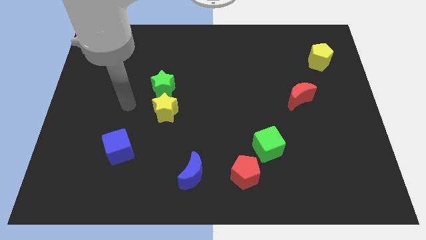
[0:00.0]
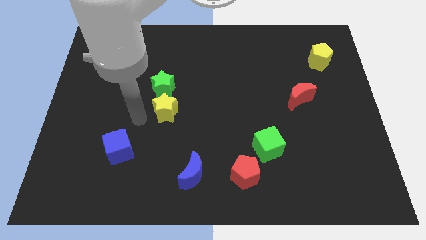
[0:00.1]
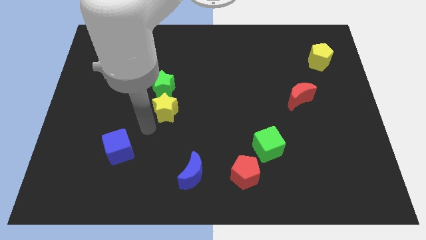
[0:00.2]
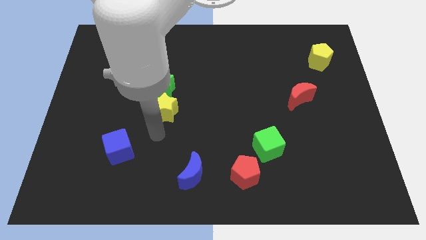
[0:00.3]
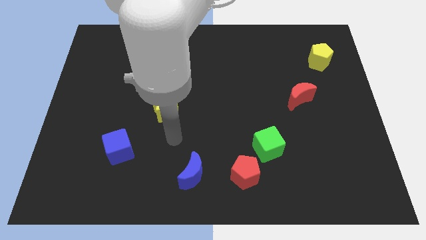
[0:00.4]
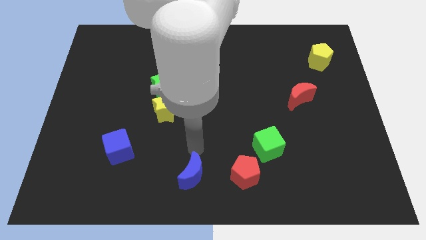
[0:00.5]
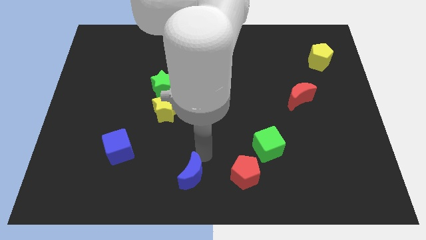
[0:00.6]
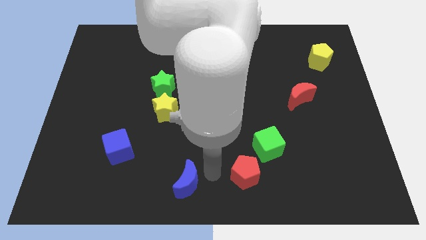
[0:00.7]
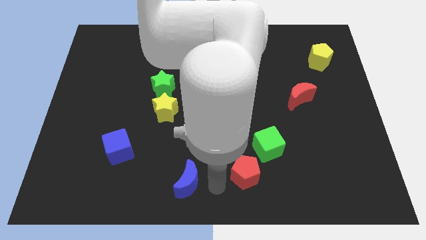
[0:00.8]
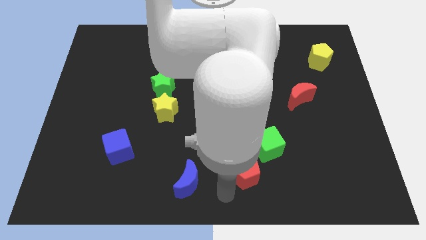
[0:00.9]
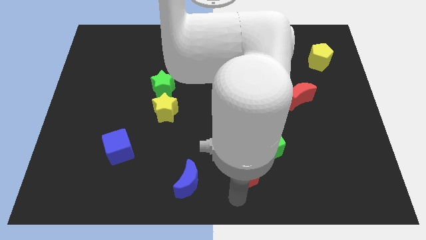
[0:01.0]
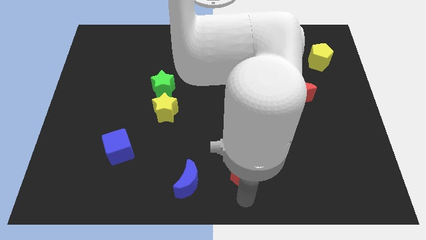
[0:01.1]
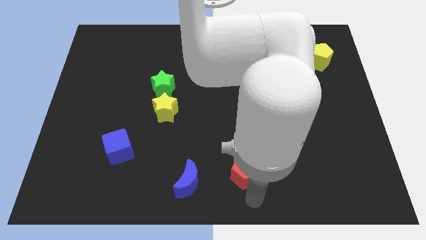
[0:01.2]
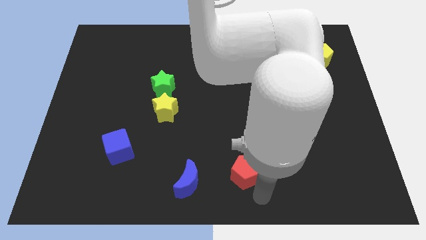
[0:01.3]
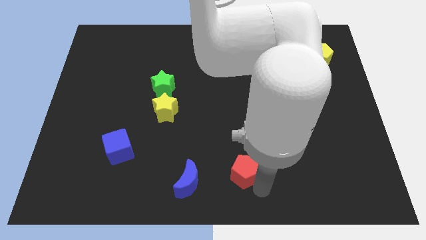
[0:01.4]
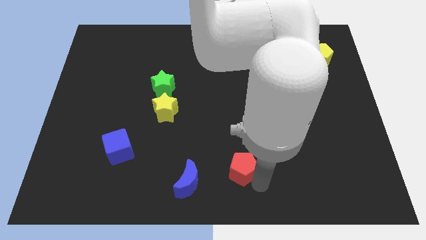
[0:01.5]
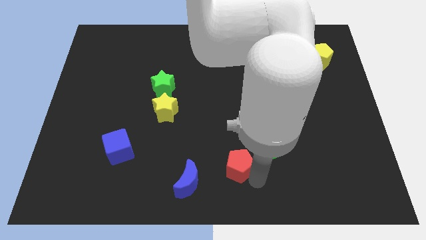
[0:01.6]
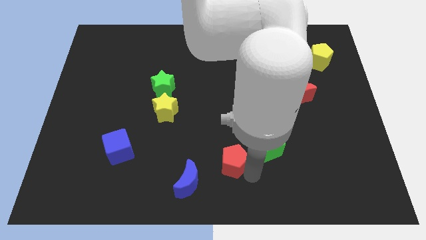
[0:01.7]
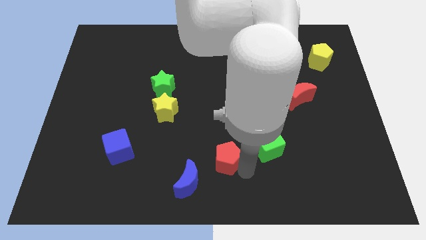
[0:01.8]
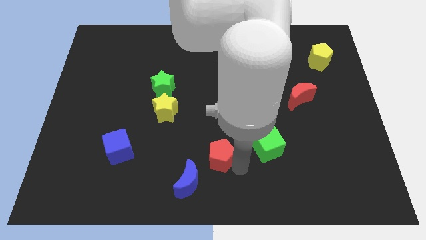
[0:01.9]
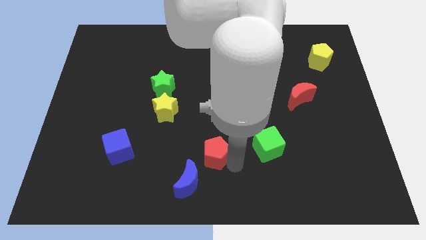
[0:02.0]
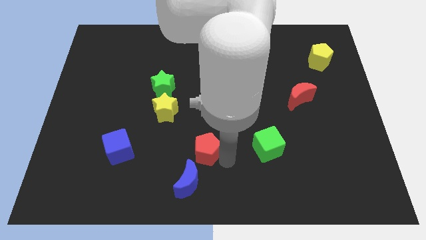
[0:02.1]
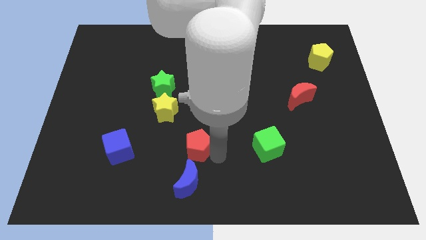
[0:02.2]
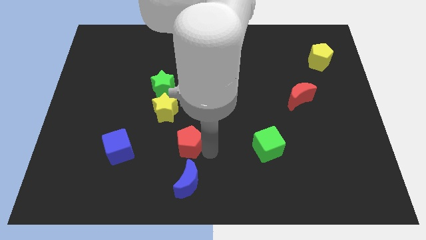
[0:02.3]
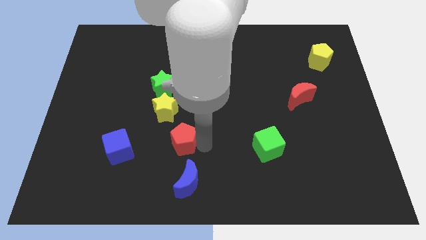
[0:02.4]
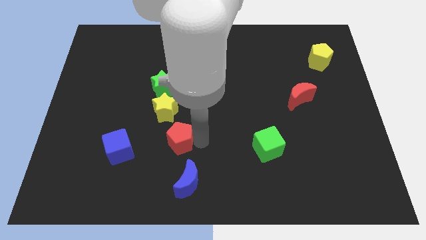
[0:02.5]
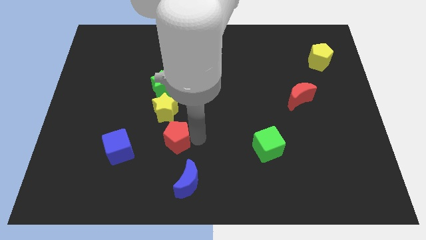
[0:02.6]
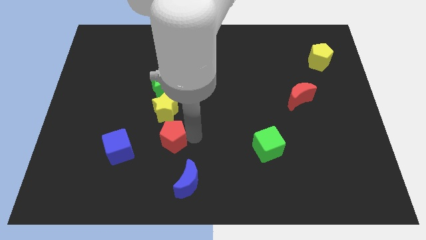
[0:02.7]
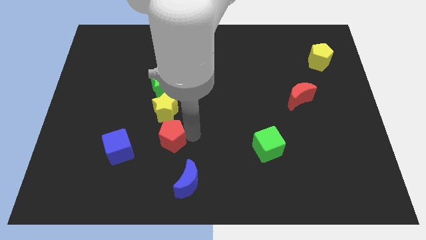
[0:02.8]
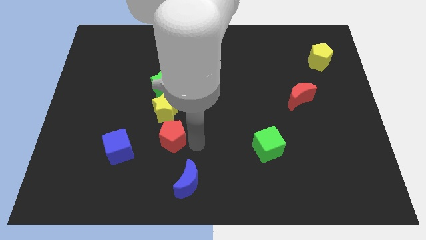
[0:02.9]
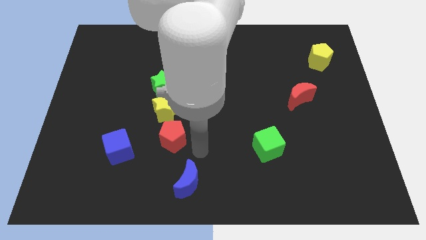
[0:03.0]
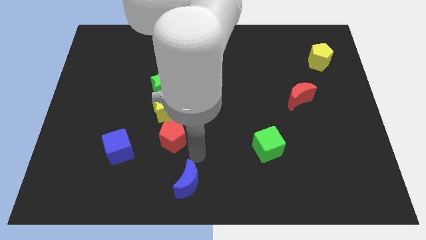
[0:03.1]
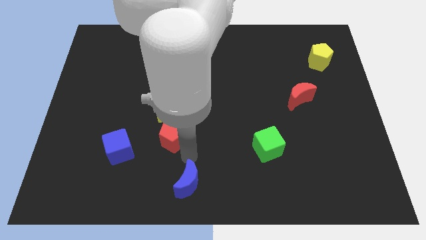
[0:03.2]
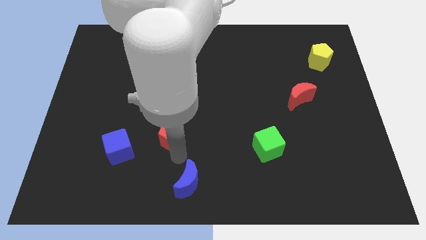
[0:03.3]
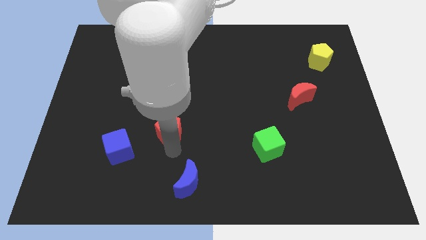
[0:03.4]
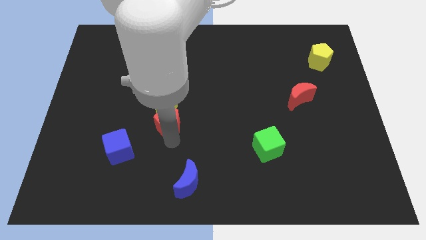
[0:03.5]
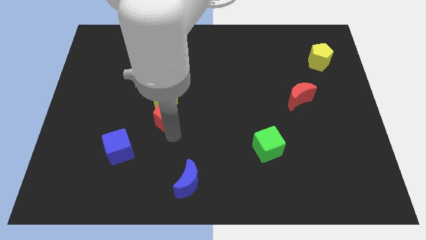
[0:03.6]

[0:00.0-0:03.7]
put the red pentagon towards the yellow star

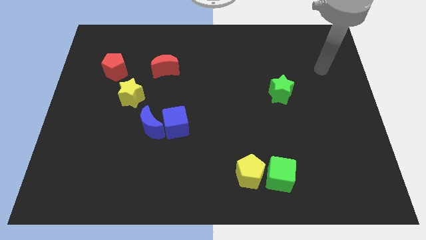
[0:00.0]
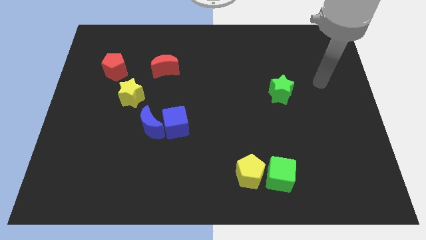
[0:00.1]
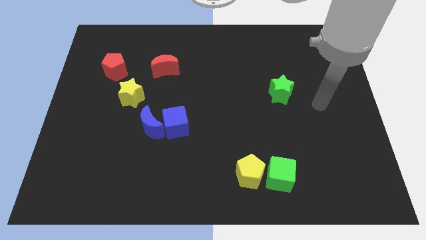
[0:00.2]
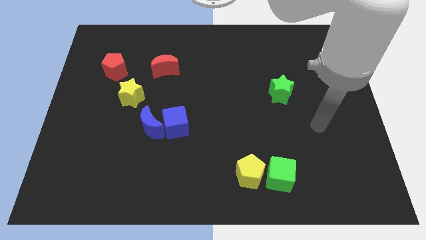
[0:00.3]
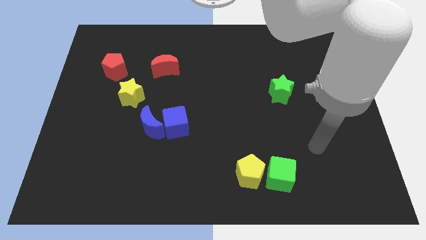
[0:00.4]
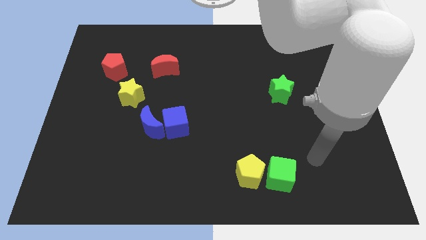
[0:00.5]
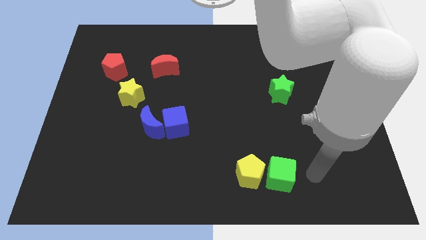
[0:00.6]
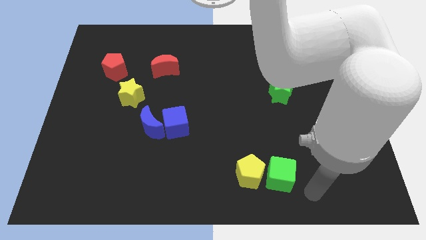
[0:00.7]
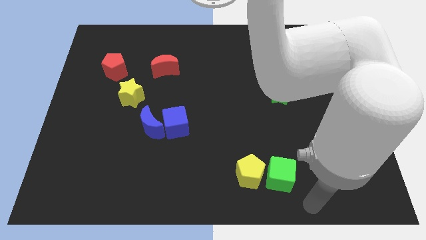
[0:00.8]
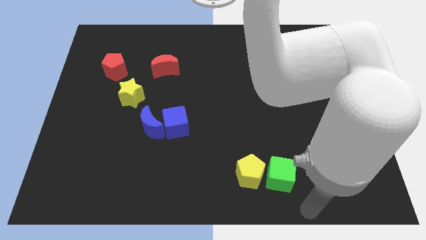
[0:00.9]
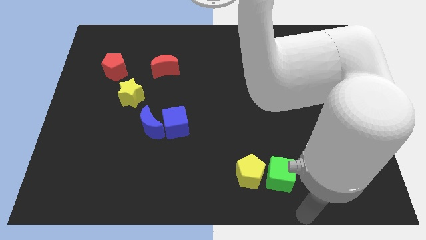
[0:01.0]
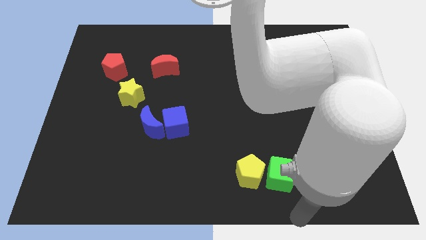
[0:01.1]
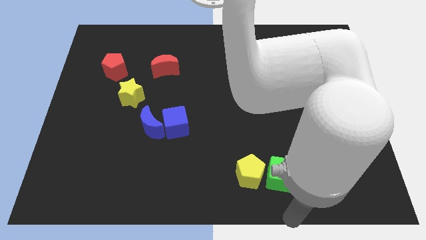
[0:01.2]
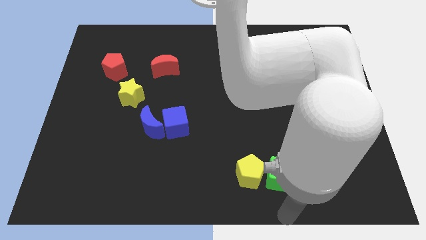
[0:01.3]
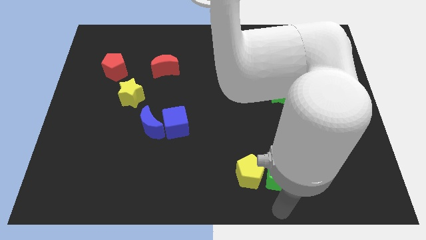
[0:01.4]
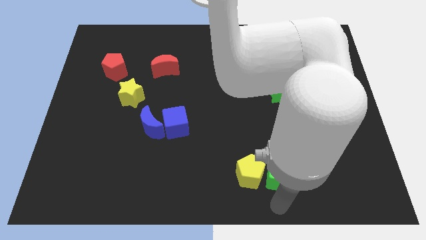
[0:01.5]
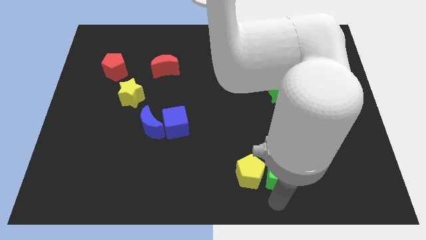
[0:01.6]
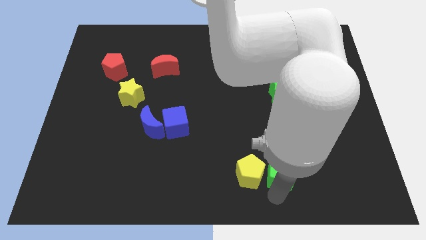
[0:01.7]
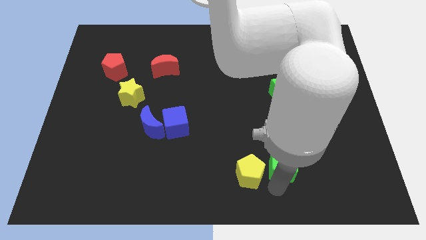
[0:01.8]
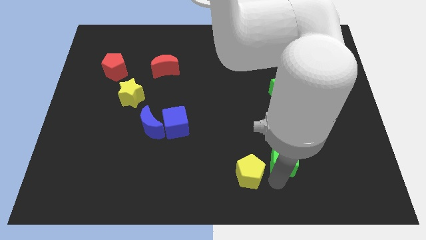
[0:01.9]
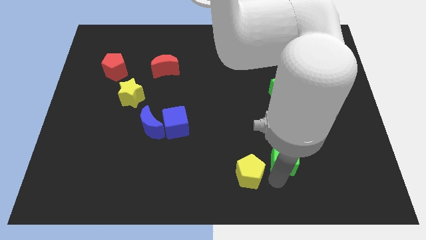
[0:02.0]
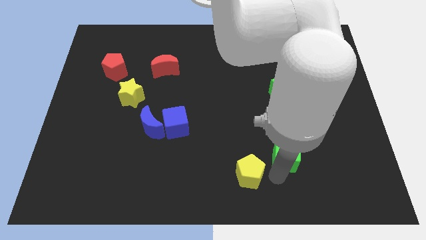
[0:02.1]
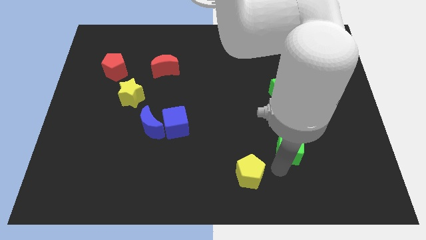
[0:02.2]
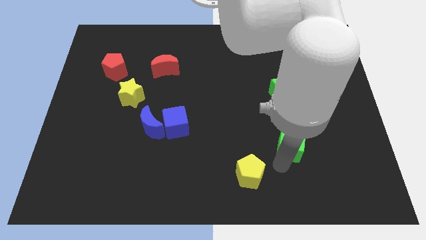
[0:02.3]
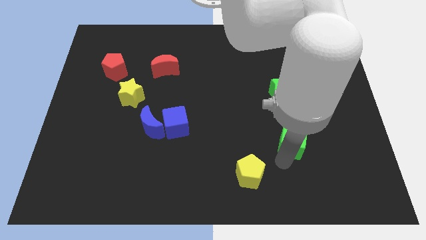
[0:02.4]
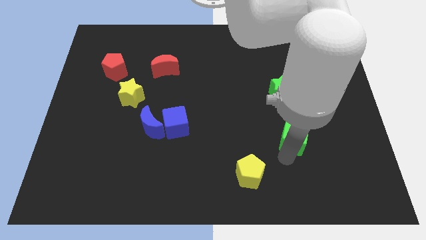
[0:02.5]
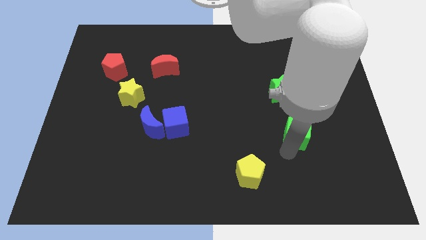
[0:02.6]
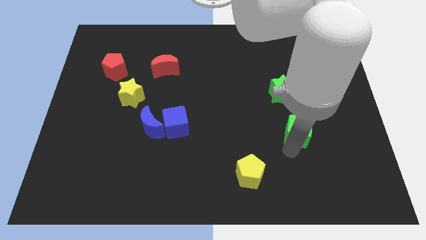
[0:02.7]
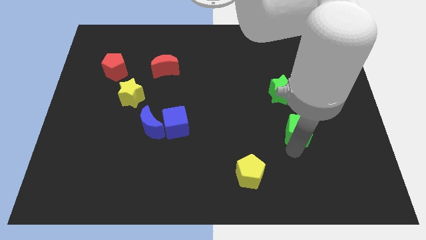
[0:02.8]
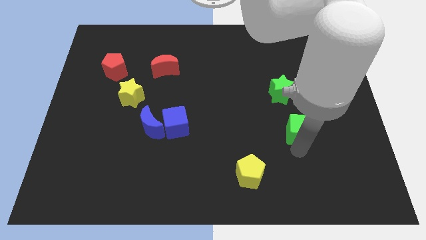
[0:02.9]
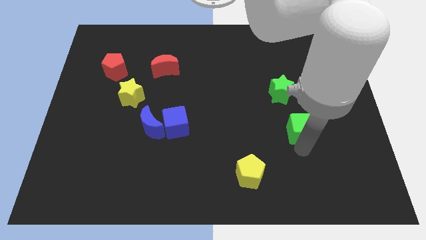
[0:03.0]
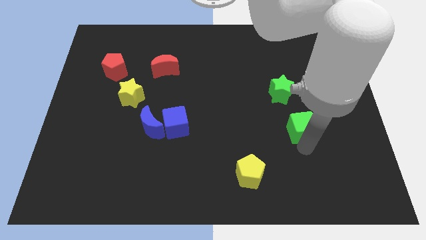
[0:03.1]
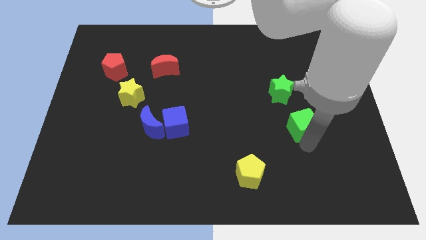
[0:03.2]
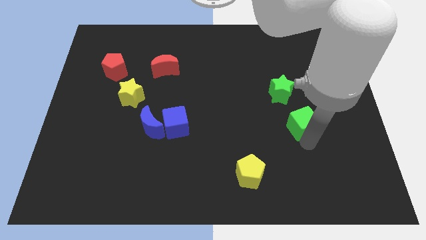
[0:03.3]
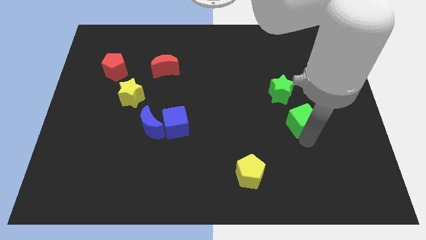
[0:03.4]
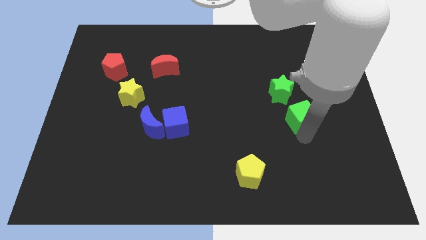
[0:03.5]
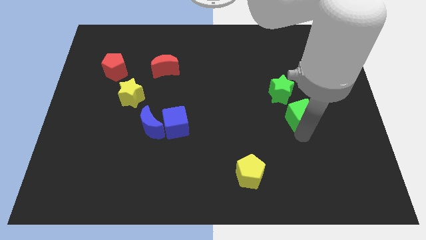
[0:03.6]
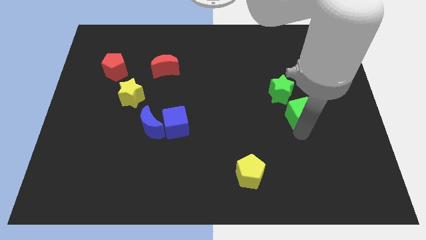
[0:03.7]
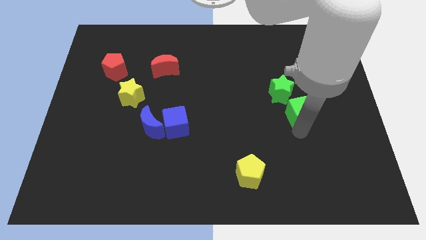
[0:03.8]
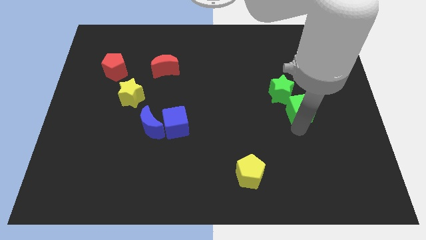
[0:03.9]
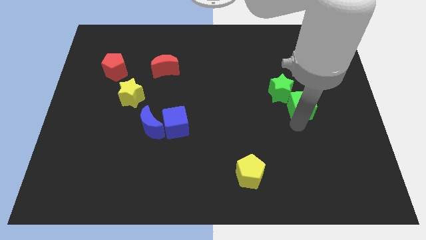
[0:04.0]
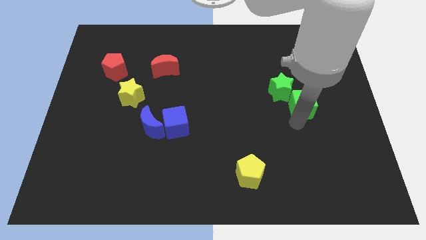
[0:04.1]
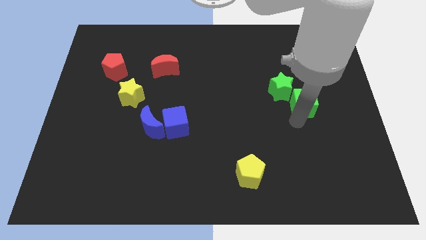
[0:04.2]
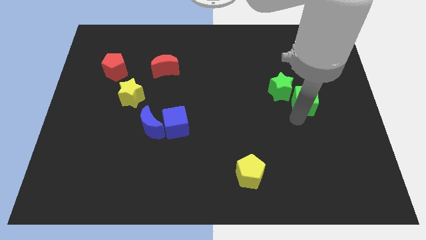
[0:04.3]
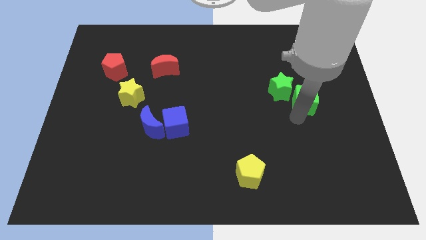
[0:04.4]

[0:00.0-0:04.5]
move the green cube to the green star

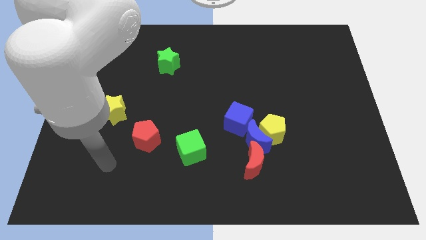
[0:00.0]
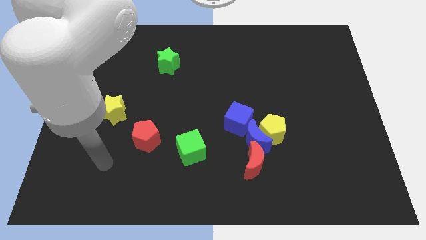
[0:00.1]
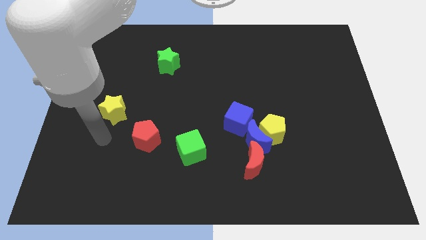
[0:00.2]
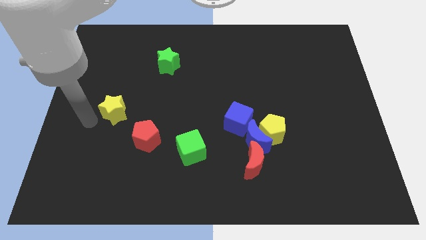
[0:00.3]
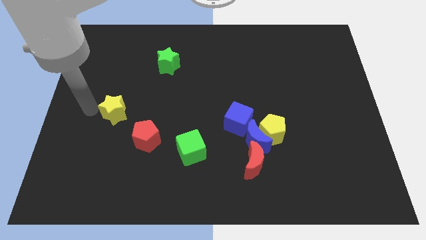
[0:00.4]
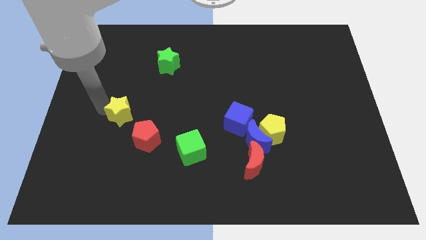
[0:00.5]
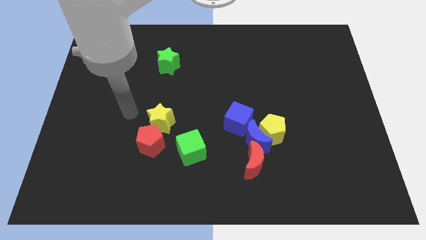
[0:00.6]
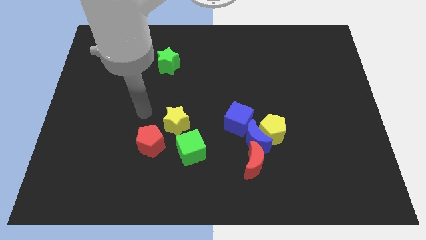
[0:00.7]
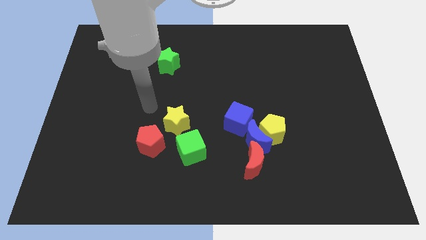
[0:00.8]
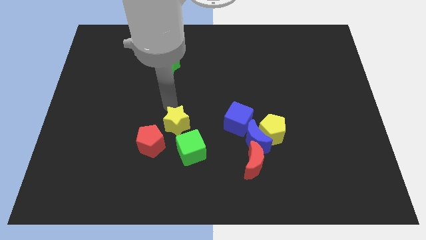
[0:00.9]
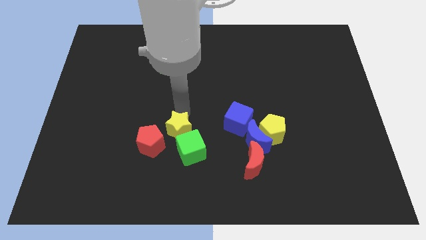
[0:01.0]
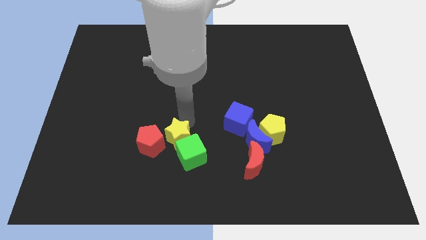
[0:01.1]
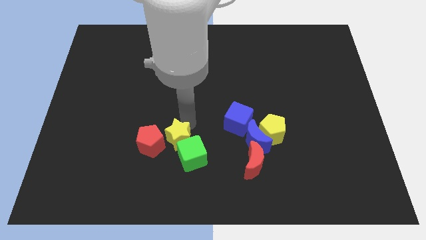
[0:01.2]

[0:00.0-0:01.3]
move the yellow star close to the green cube
